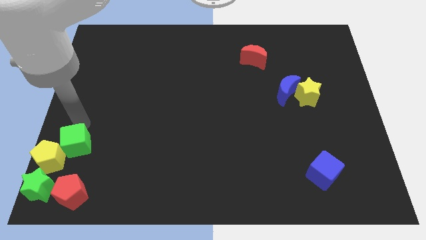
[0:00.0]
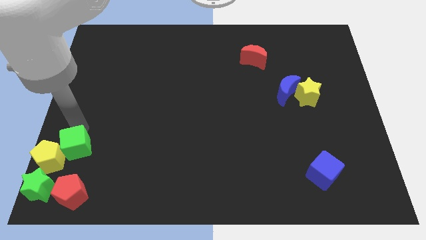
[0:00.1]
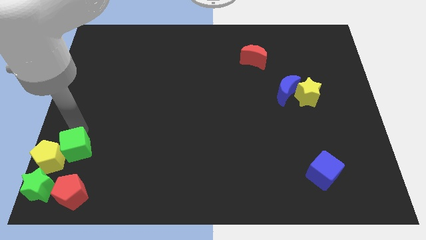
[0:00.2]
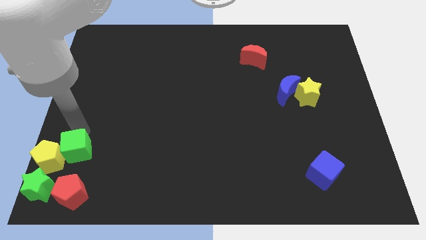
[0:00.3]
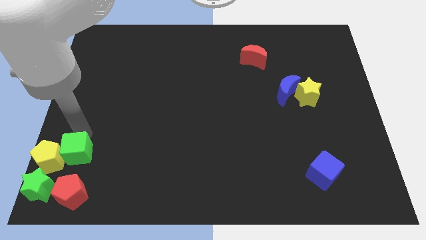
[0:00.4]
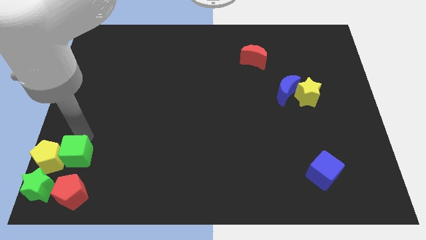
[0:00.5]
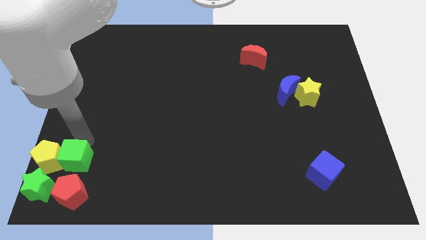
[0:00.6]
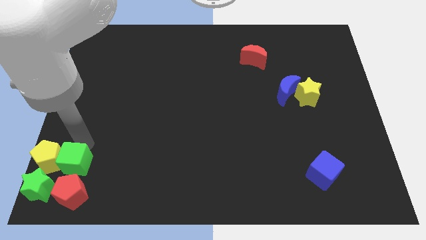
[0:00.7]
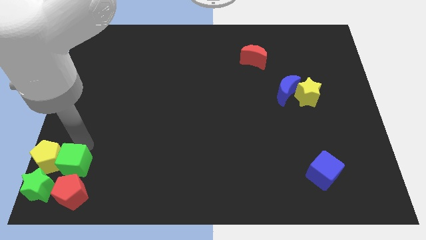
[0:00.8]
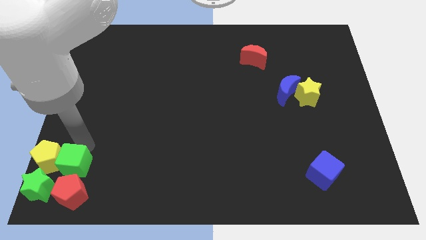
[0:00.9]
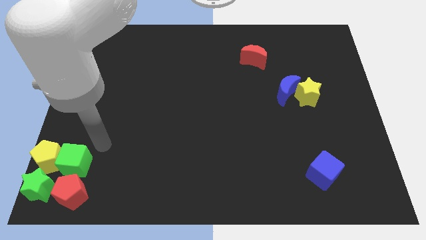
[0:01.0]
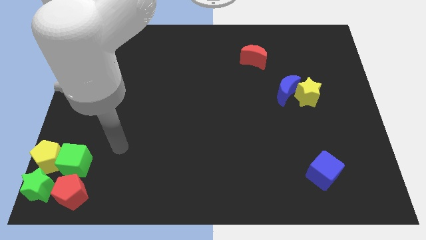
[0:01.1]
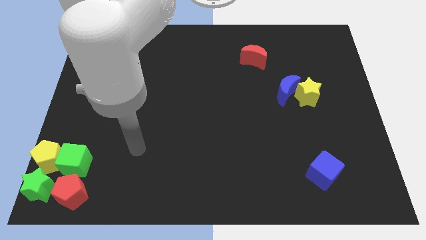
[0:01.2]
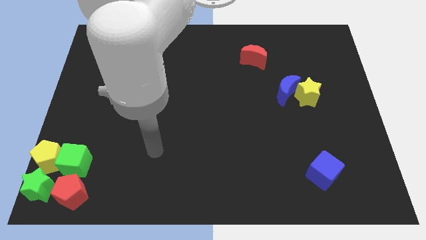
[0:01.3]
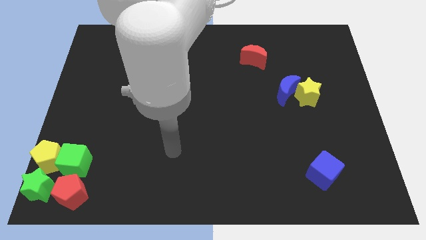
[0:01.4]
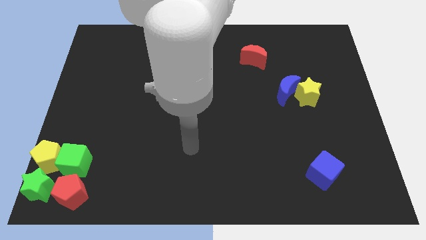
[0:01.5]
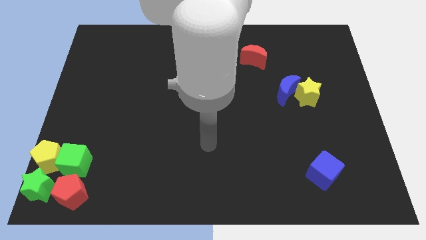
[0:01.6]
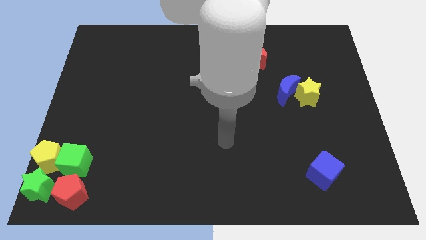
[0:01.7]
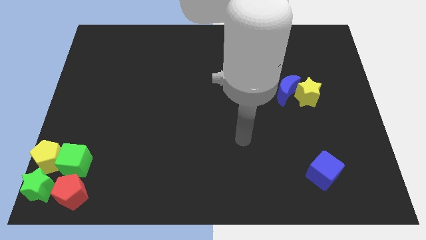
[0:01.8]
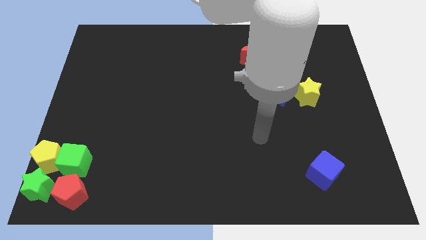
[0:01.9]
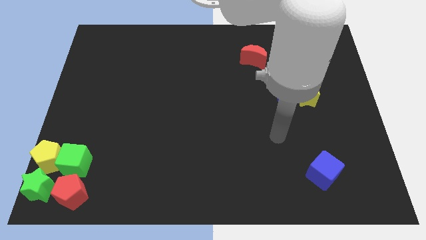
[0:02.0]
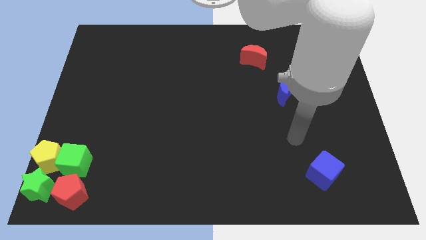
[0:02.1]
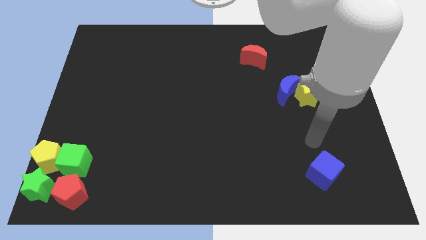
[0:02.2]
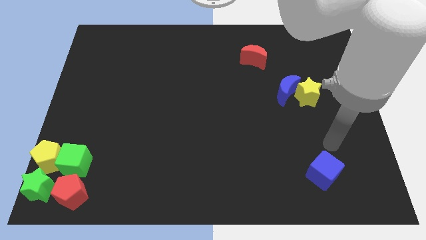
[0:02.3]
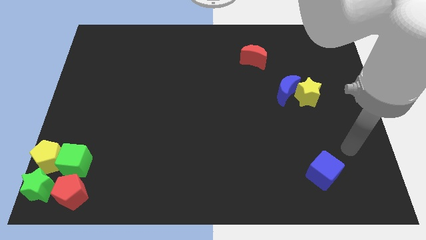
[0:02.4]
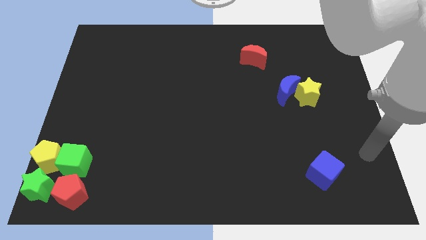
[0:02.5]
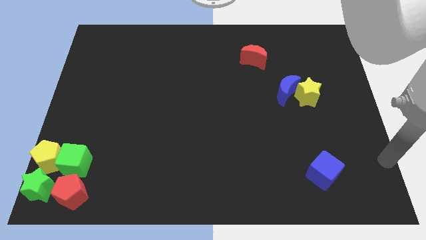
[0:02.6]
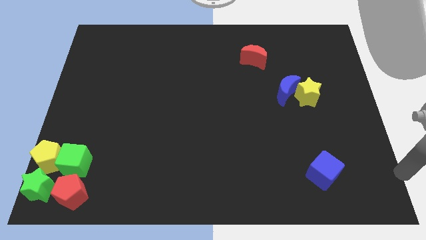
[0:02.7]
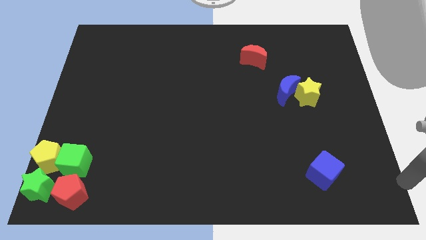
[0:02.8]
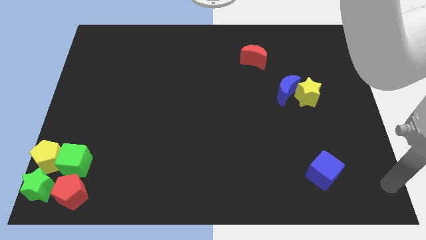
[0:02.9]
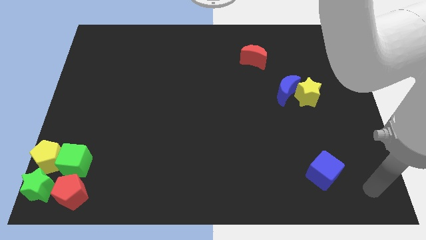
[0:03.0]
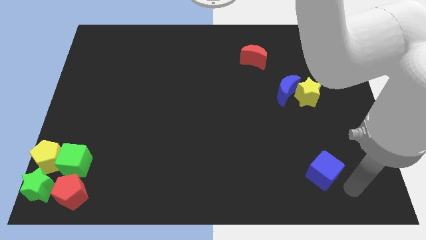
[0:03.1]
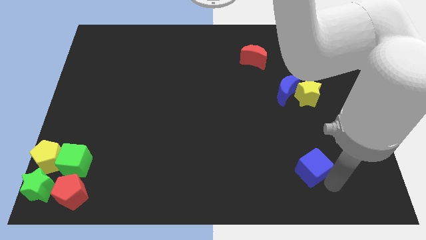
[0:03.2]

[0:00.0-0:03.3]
place the arm diagonally to the blue cube

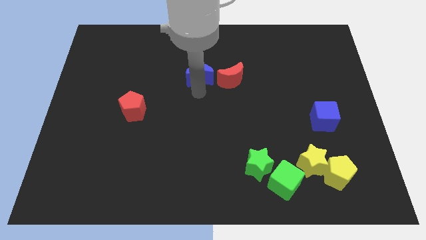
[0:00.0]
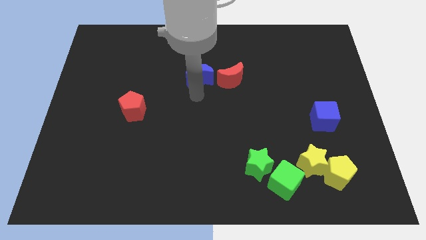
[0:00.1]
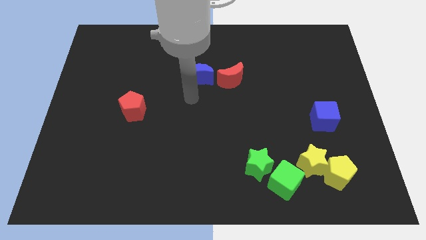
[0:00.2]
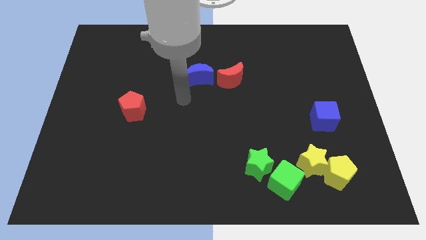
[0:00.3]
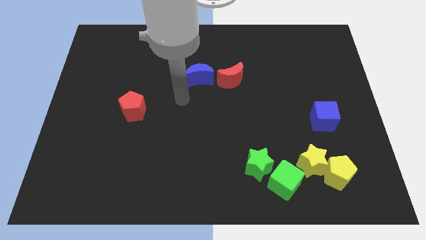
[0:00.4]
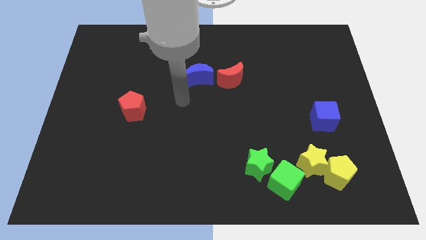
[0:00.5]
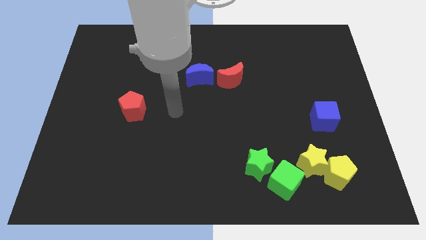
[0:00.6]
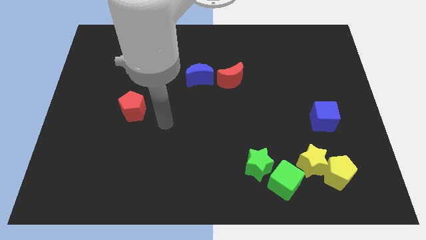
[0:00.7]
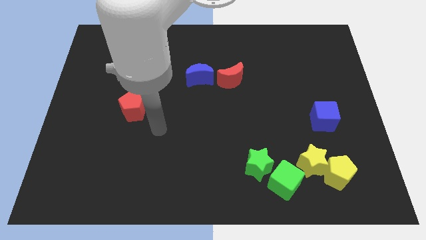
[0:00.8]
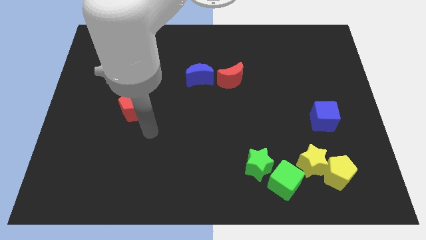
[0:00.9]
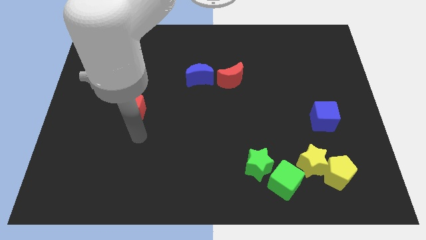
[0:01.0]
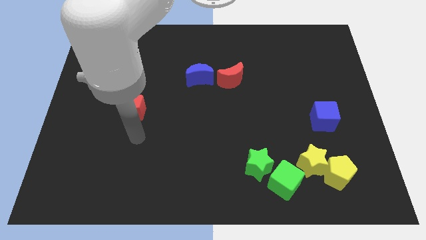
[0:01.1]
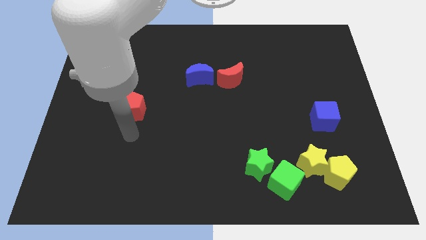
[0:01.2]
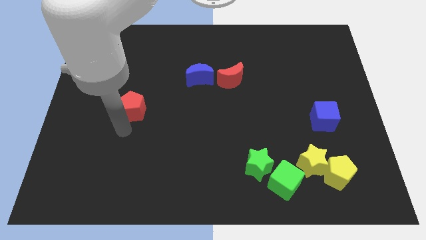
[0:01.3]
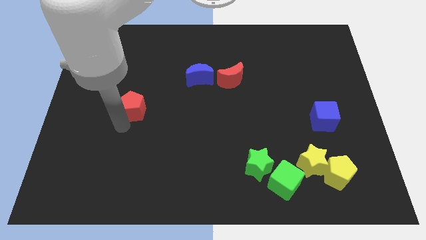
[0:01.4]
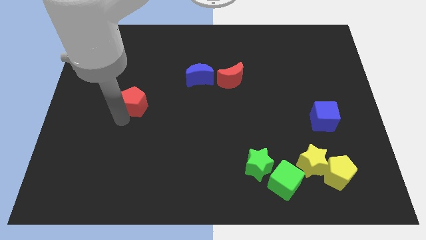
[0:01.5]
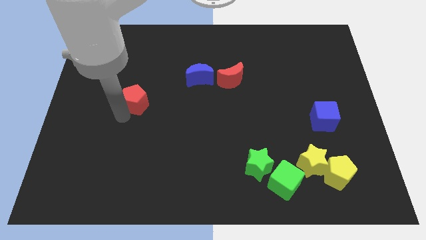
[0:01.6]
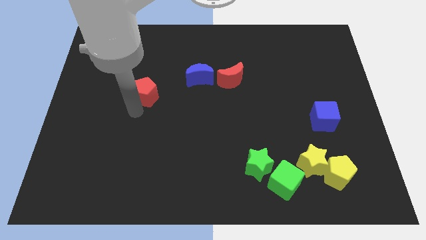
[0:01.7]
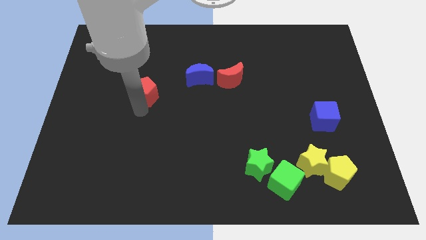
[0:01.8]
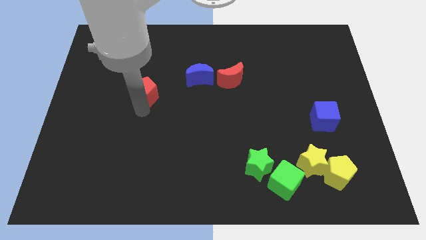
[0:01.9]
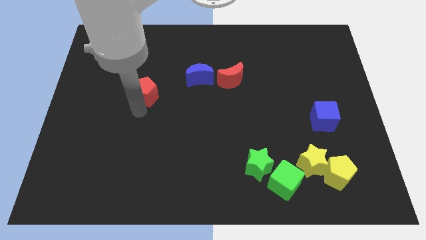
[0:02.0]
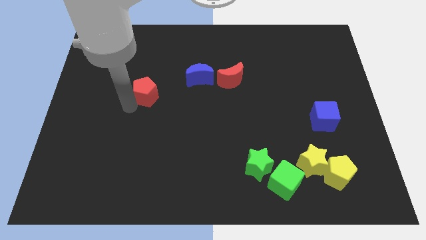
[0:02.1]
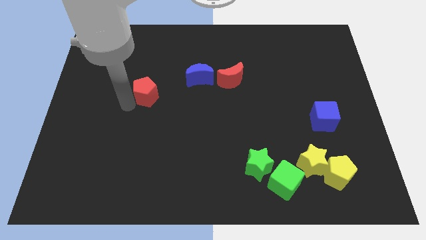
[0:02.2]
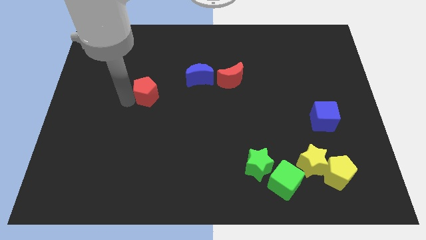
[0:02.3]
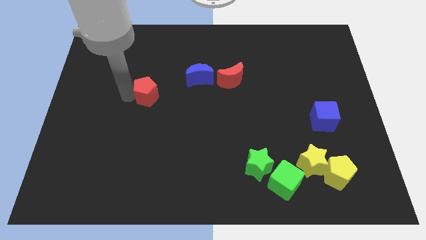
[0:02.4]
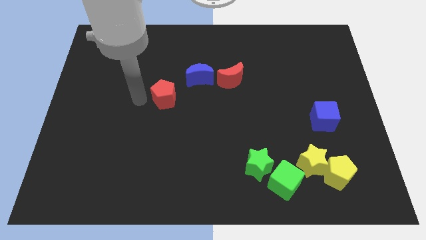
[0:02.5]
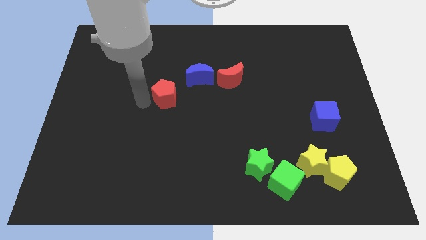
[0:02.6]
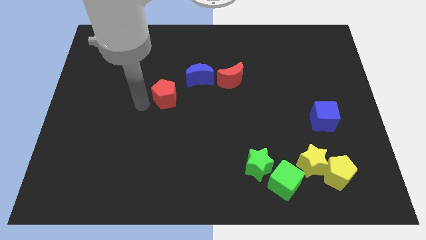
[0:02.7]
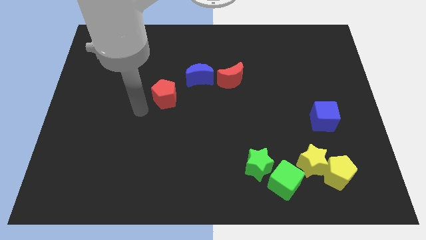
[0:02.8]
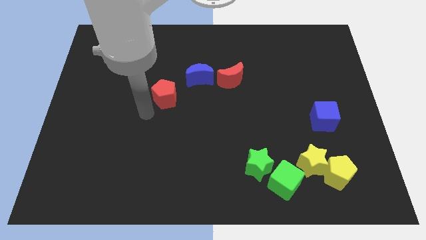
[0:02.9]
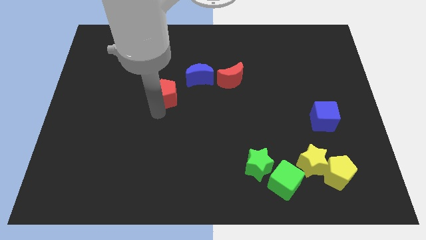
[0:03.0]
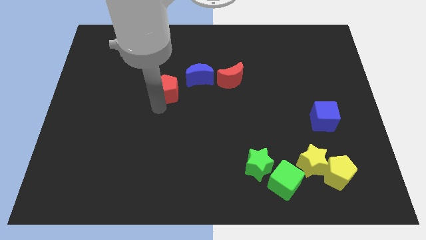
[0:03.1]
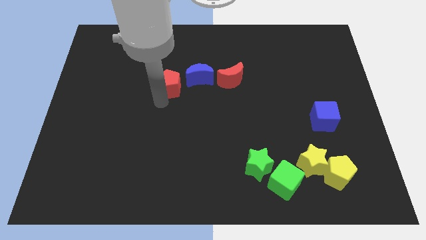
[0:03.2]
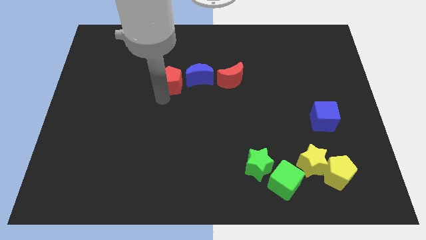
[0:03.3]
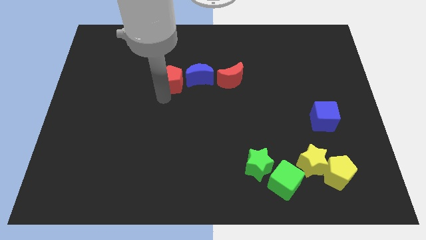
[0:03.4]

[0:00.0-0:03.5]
place the red pentagon close to the blue moon

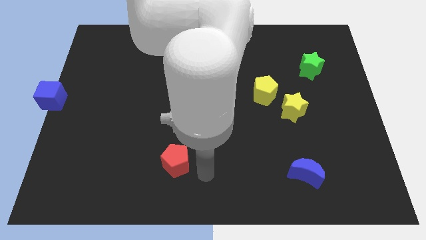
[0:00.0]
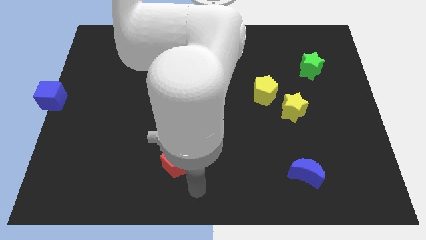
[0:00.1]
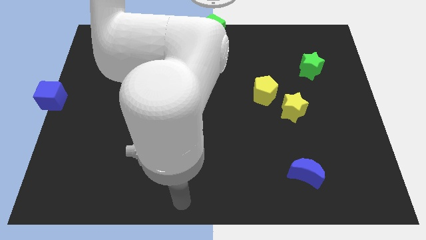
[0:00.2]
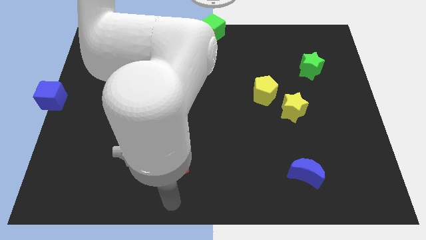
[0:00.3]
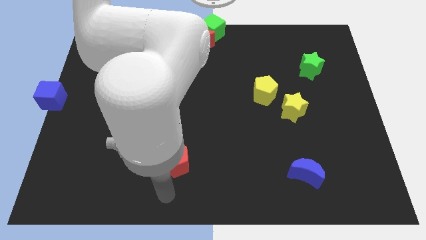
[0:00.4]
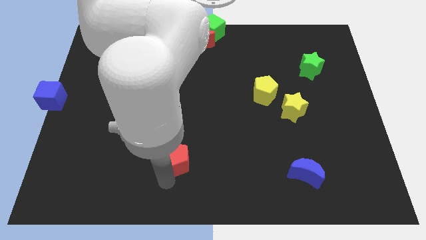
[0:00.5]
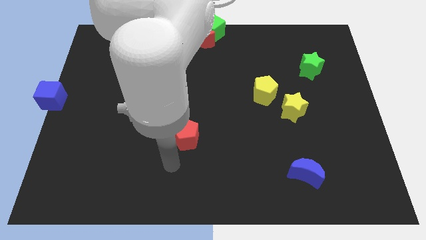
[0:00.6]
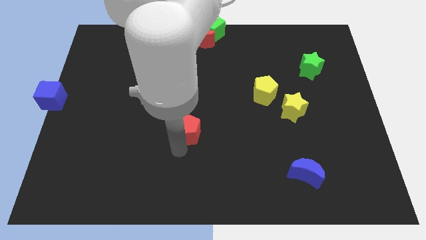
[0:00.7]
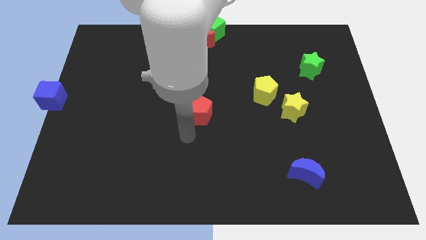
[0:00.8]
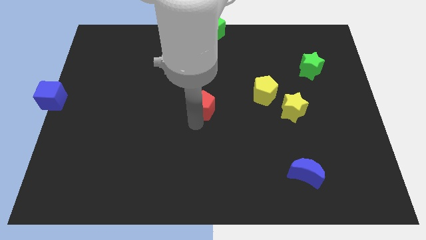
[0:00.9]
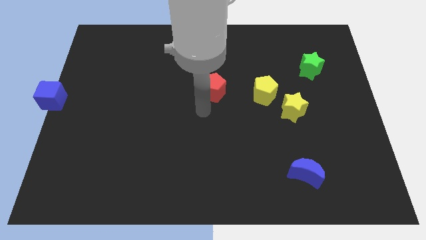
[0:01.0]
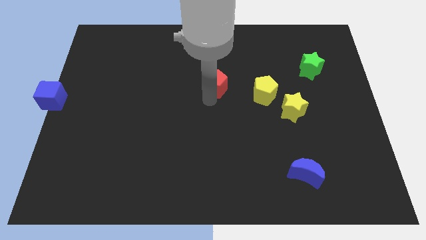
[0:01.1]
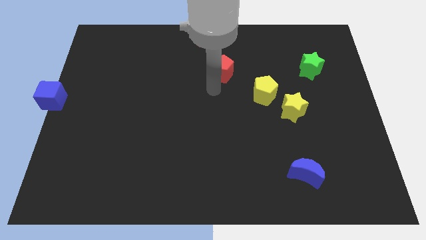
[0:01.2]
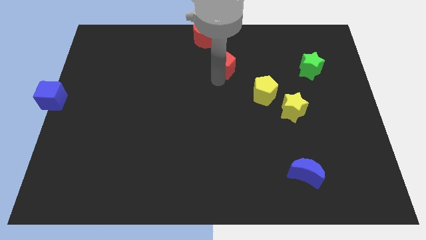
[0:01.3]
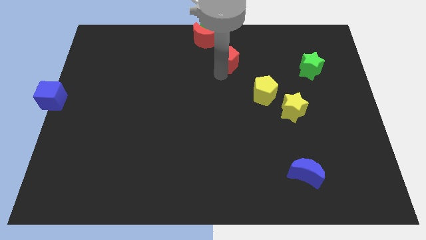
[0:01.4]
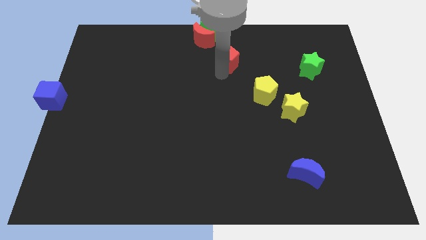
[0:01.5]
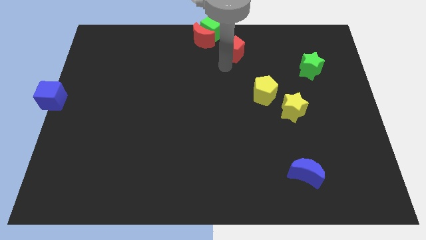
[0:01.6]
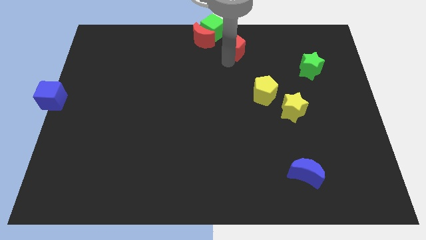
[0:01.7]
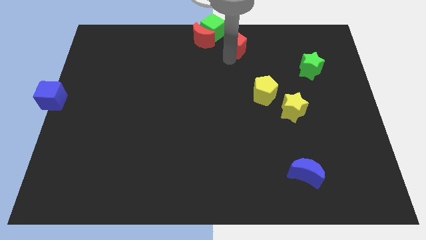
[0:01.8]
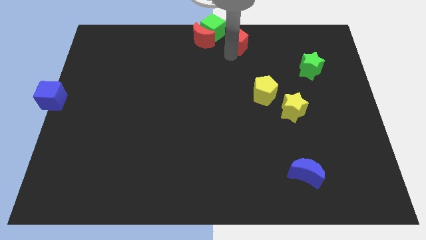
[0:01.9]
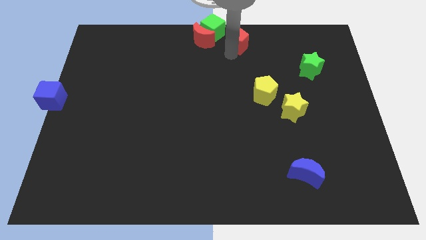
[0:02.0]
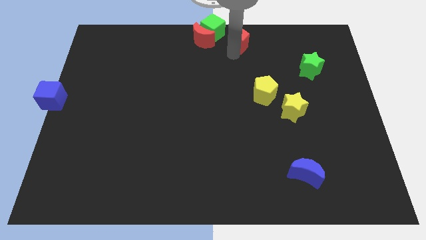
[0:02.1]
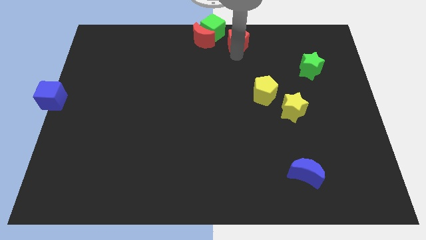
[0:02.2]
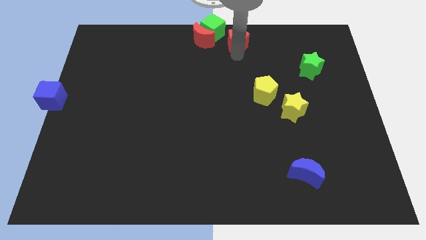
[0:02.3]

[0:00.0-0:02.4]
move the red pentagon close to the green cube

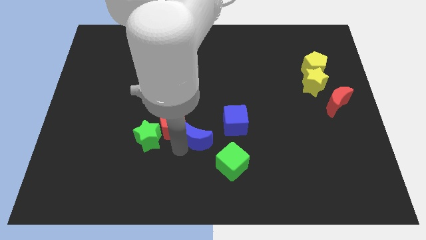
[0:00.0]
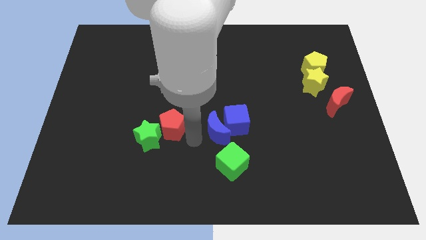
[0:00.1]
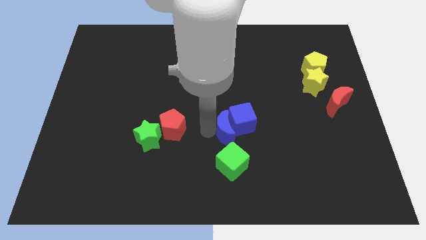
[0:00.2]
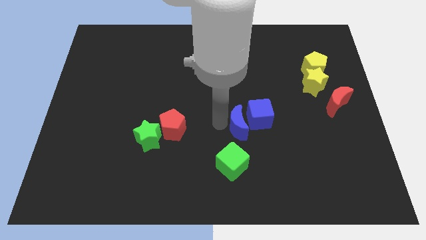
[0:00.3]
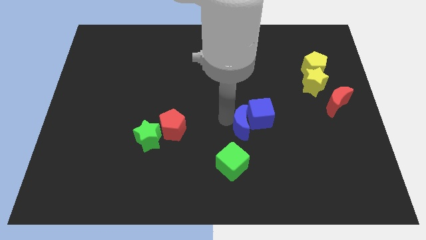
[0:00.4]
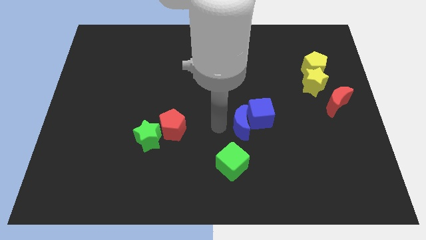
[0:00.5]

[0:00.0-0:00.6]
move the blue moon into the blue cube
